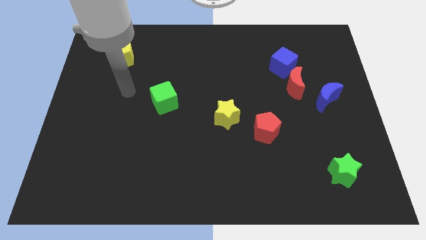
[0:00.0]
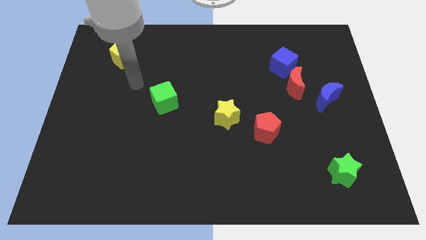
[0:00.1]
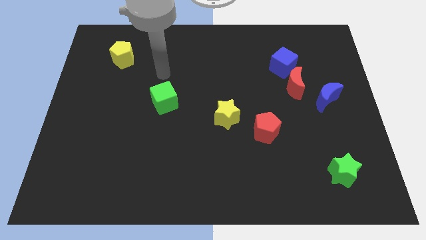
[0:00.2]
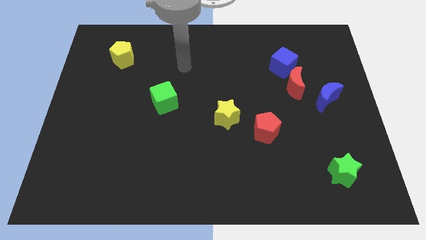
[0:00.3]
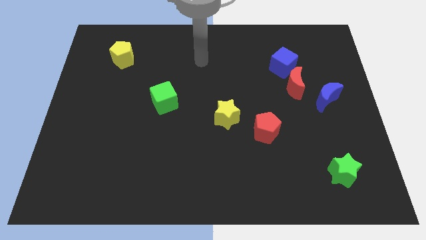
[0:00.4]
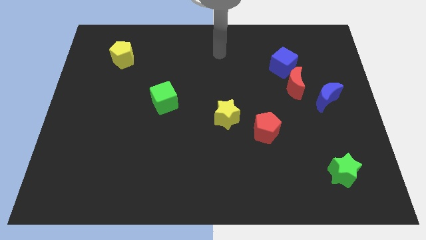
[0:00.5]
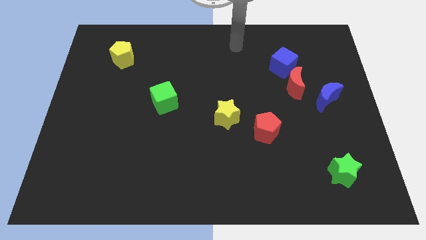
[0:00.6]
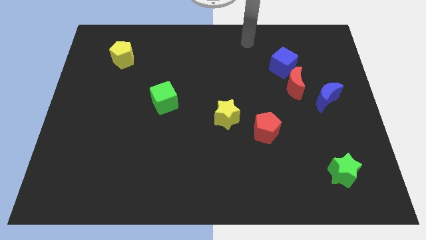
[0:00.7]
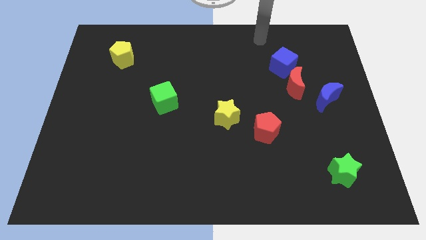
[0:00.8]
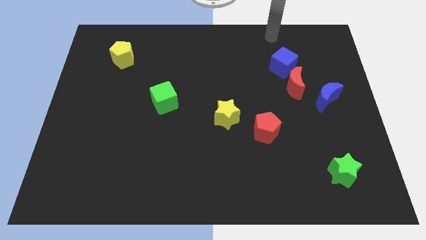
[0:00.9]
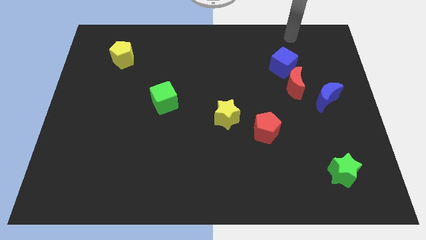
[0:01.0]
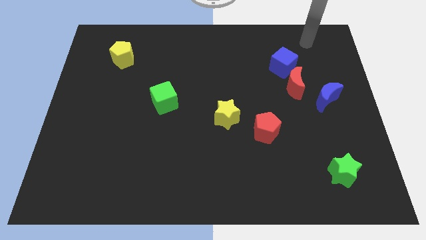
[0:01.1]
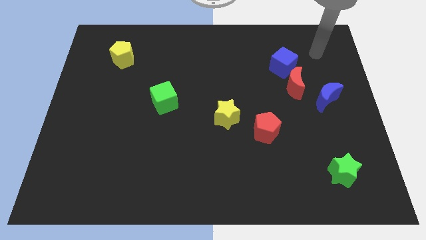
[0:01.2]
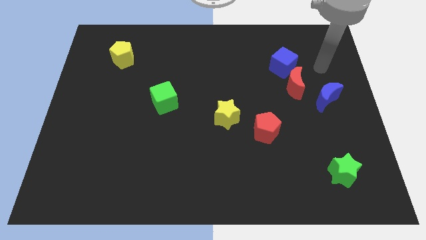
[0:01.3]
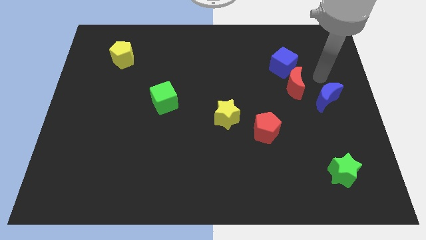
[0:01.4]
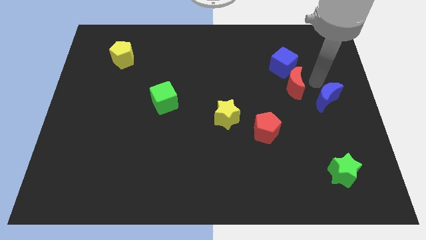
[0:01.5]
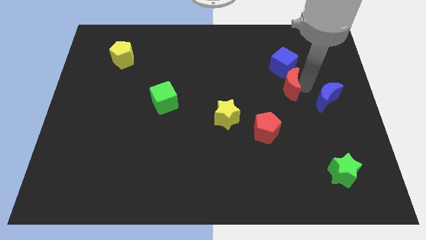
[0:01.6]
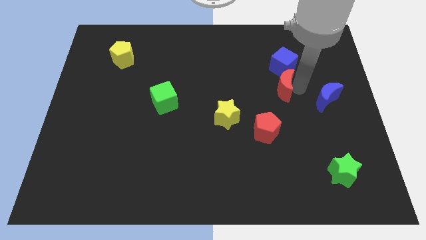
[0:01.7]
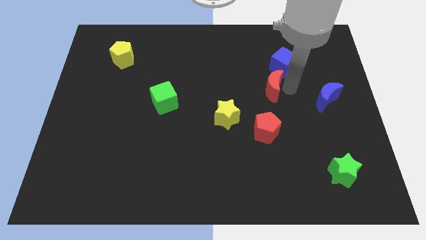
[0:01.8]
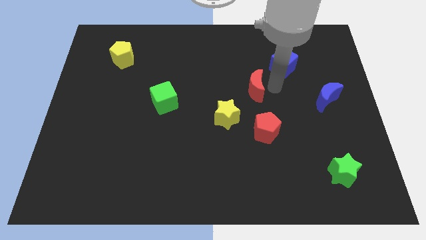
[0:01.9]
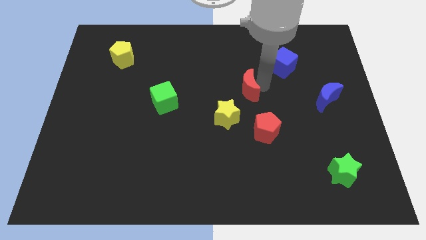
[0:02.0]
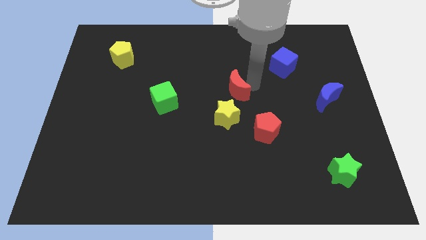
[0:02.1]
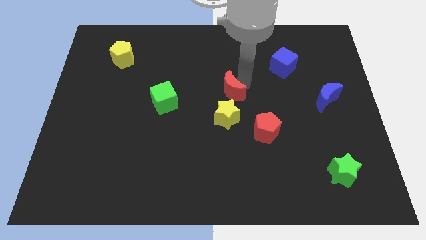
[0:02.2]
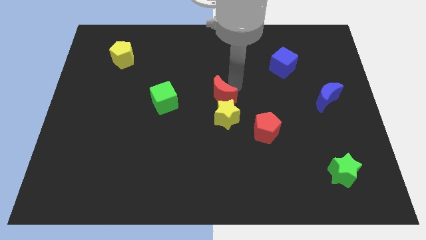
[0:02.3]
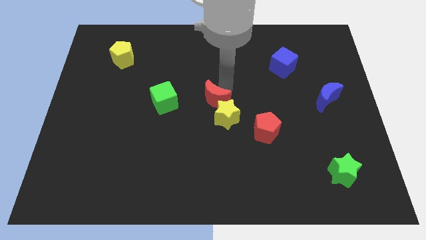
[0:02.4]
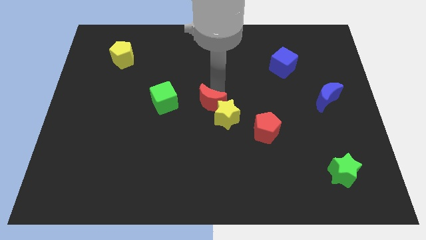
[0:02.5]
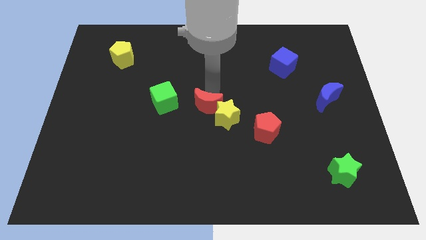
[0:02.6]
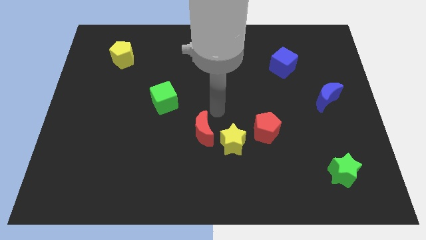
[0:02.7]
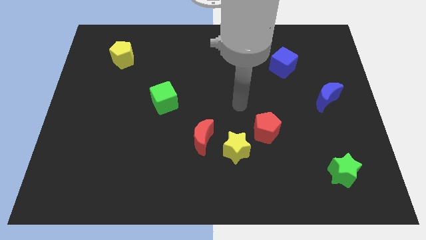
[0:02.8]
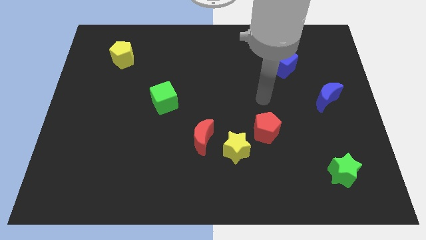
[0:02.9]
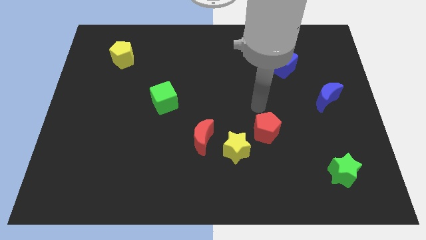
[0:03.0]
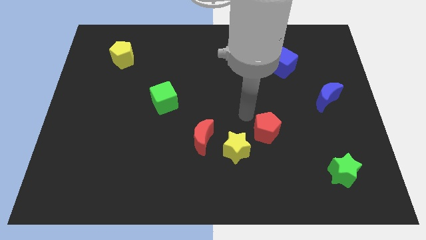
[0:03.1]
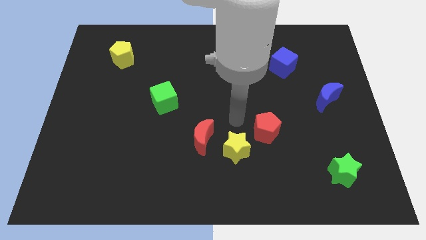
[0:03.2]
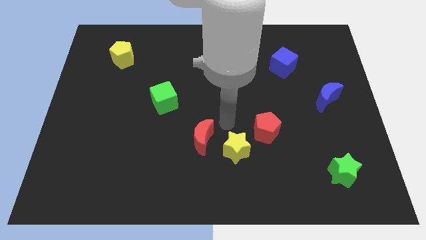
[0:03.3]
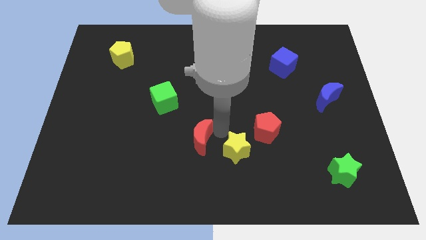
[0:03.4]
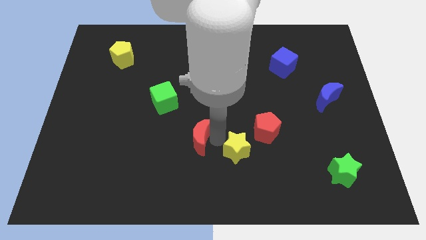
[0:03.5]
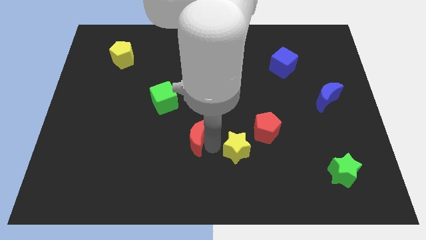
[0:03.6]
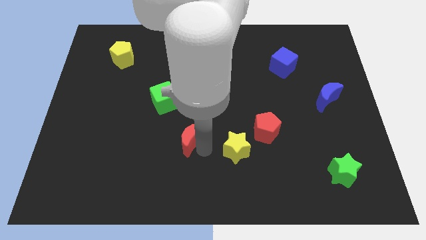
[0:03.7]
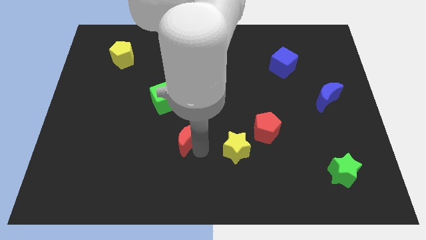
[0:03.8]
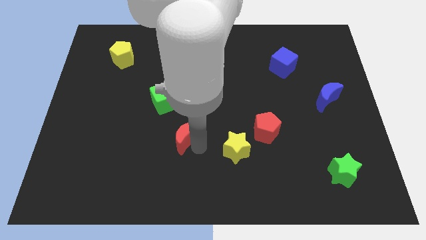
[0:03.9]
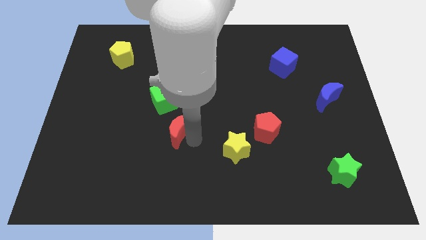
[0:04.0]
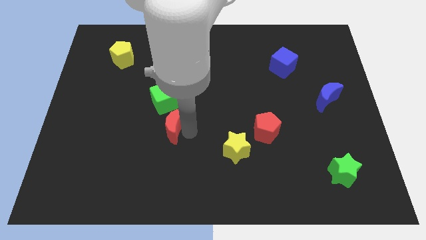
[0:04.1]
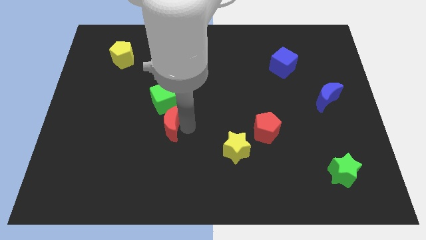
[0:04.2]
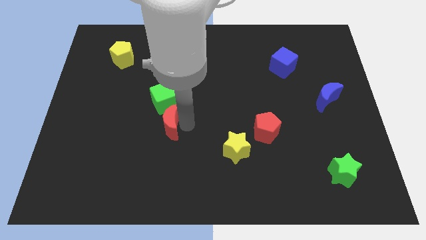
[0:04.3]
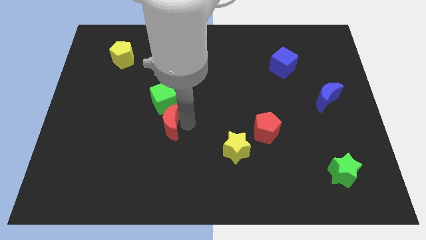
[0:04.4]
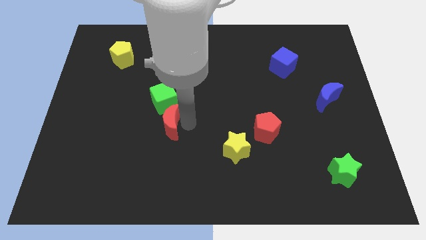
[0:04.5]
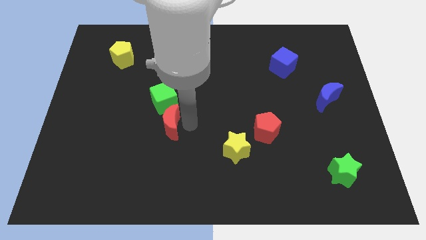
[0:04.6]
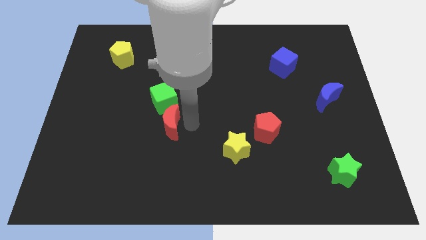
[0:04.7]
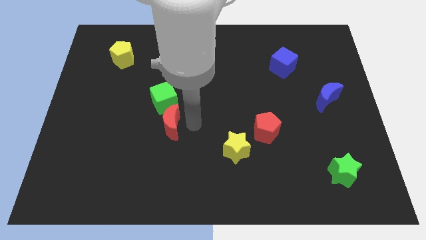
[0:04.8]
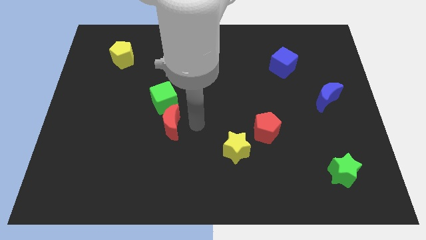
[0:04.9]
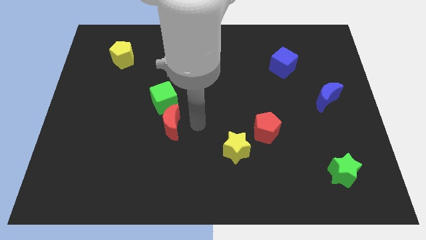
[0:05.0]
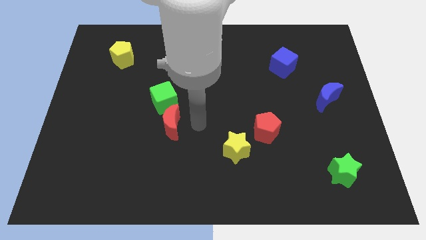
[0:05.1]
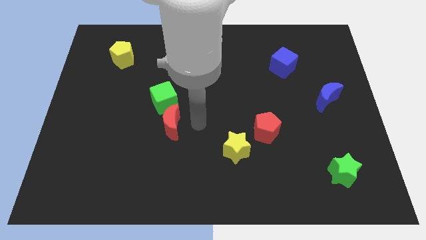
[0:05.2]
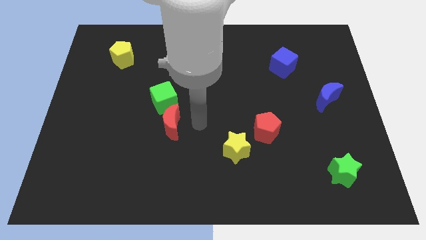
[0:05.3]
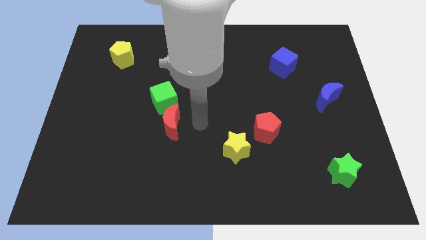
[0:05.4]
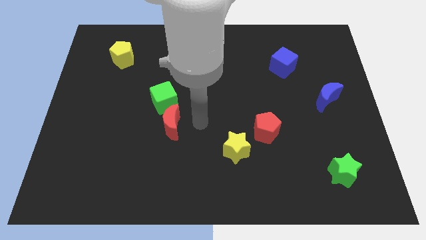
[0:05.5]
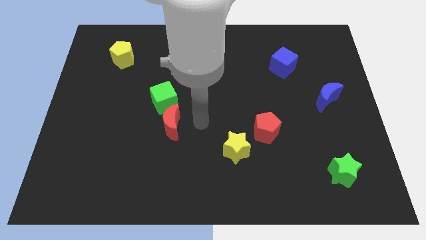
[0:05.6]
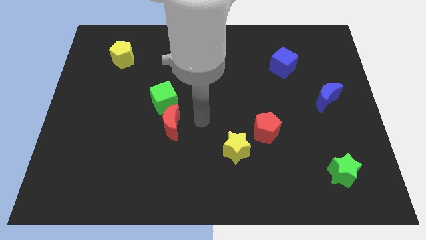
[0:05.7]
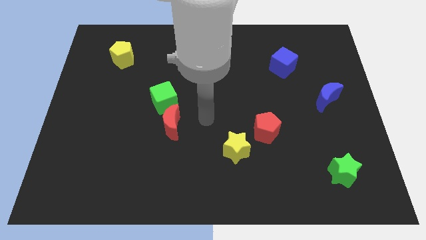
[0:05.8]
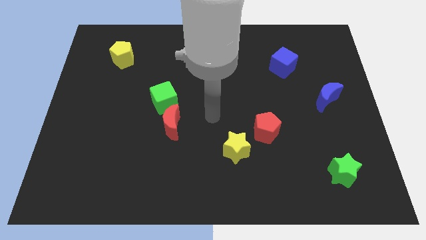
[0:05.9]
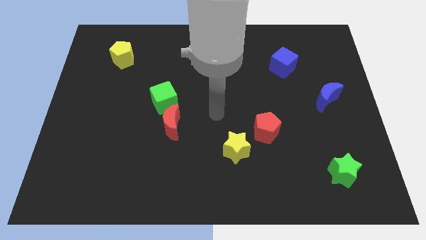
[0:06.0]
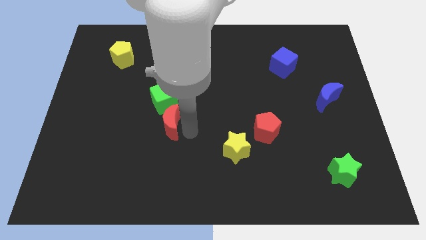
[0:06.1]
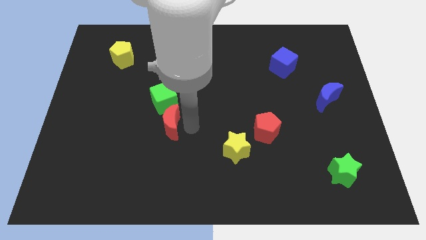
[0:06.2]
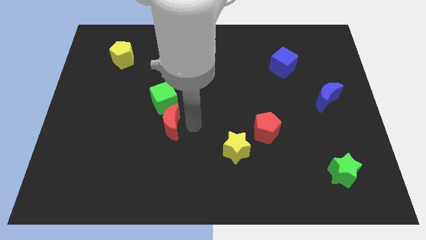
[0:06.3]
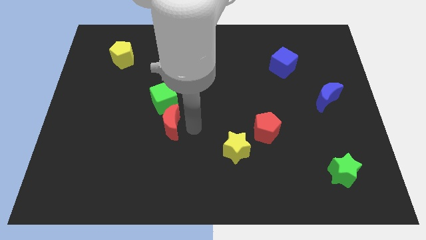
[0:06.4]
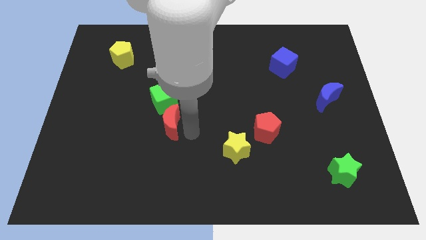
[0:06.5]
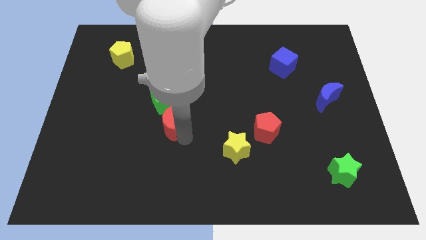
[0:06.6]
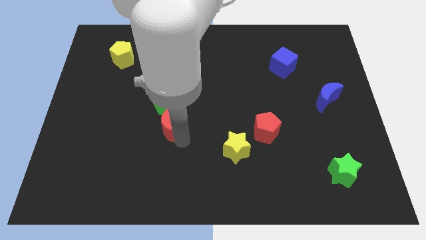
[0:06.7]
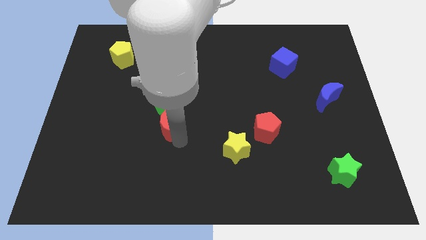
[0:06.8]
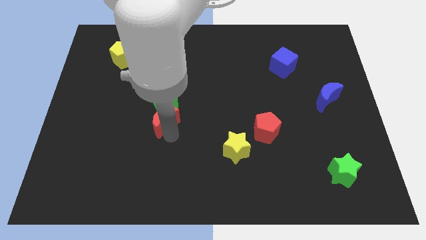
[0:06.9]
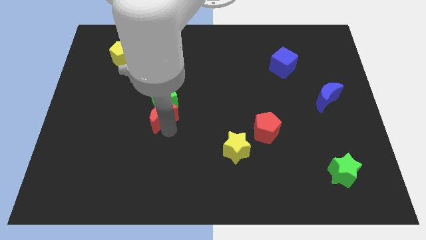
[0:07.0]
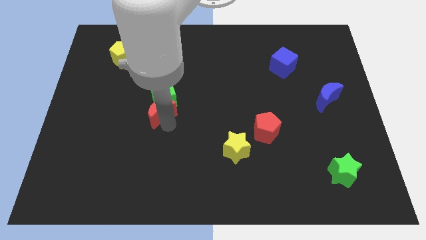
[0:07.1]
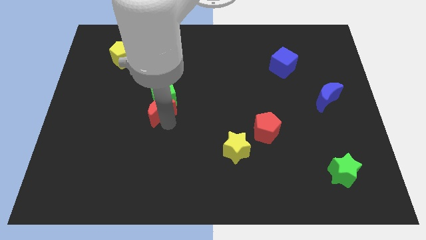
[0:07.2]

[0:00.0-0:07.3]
slide the red moon next to the green cube

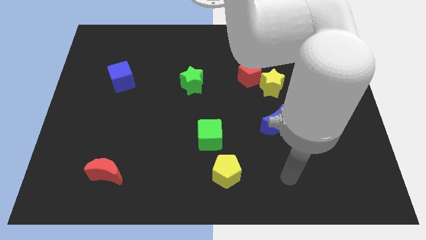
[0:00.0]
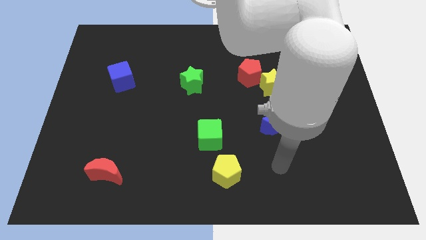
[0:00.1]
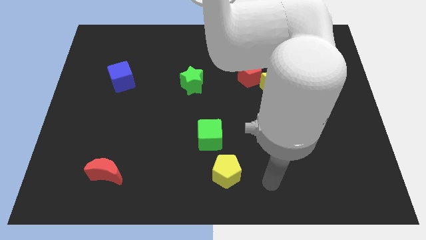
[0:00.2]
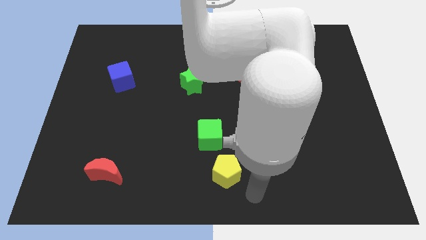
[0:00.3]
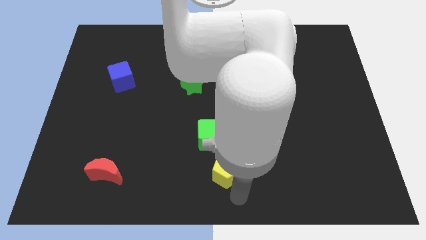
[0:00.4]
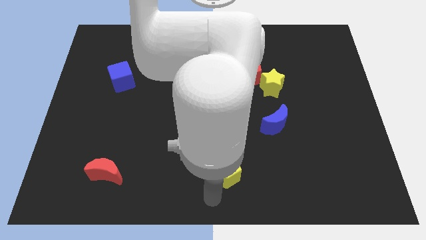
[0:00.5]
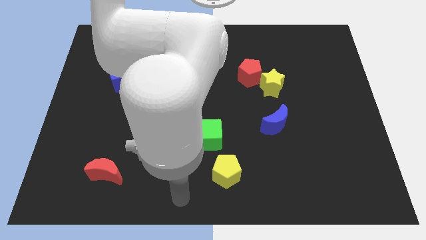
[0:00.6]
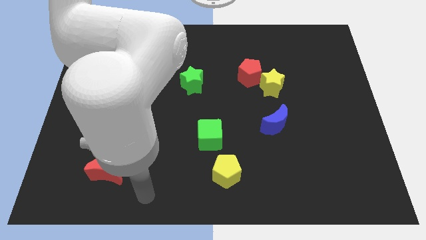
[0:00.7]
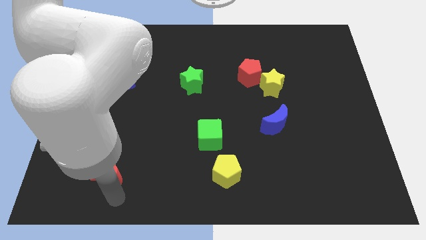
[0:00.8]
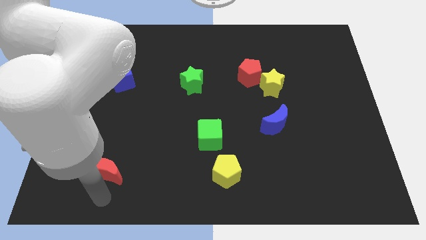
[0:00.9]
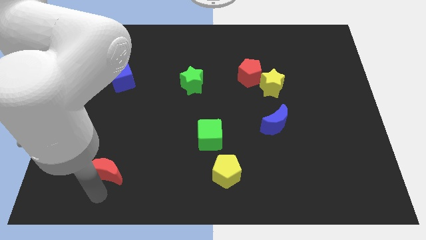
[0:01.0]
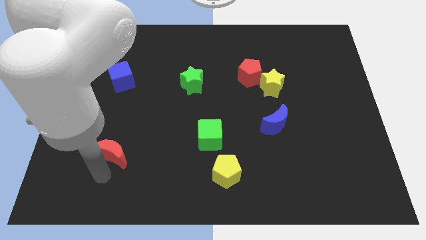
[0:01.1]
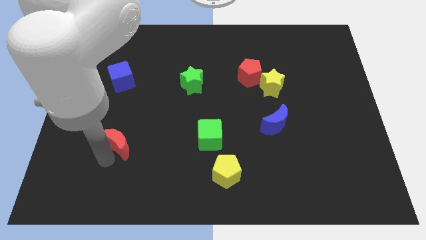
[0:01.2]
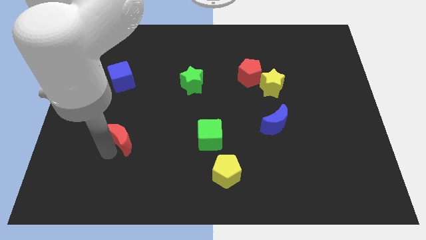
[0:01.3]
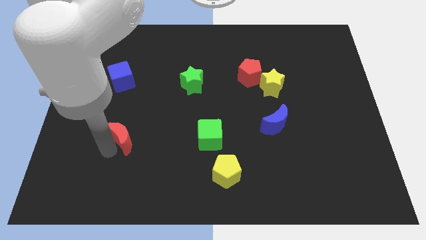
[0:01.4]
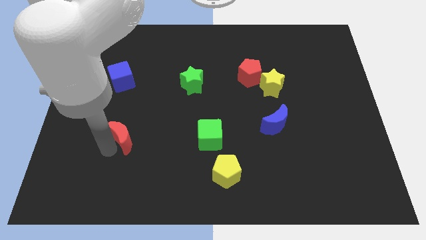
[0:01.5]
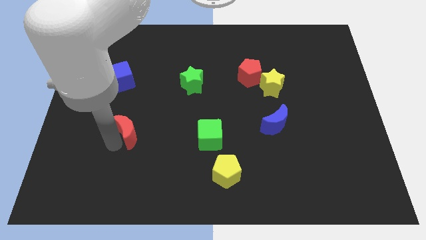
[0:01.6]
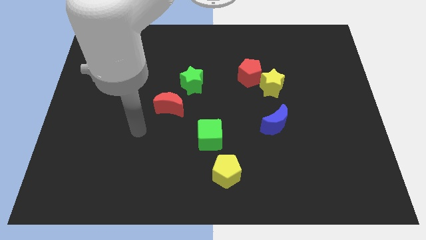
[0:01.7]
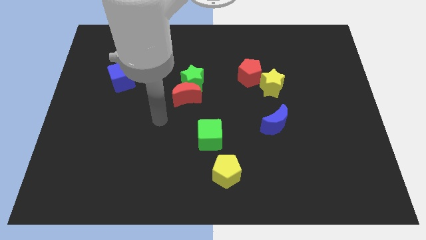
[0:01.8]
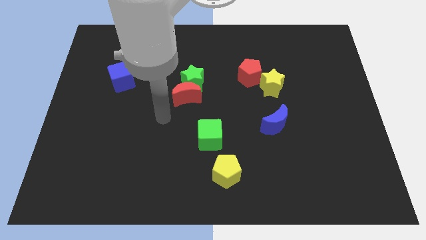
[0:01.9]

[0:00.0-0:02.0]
slide the red moon towards the green star
